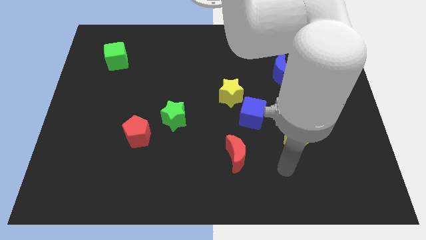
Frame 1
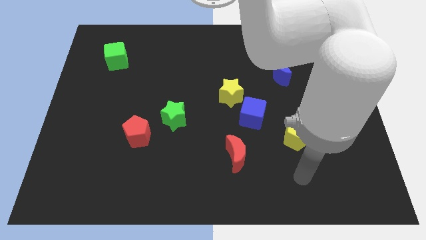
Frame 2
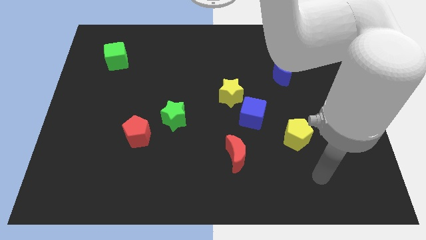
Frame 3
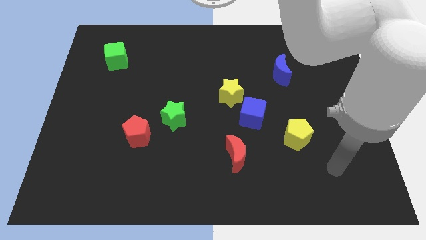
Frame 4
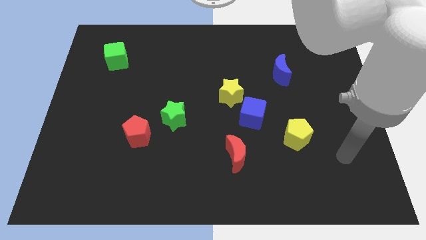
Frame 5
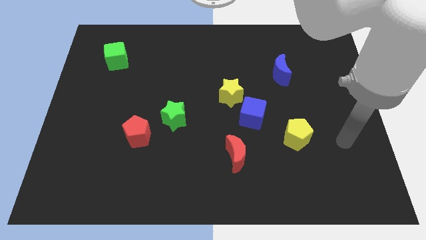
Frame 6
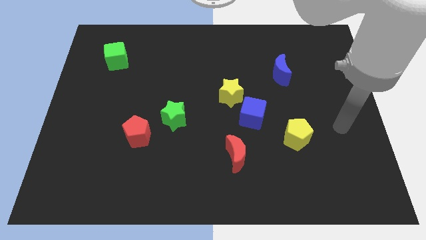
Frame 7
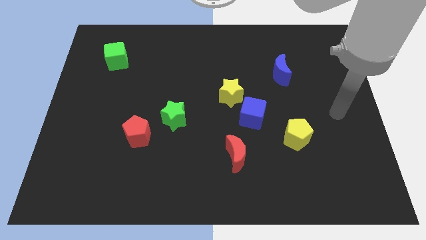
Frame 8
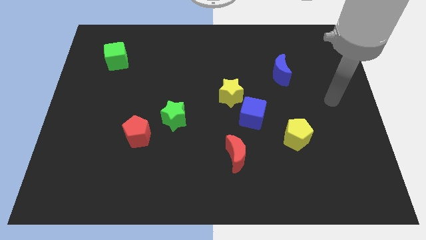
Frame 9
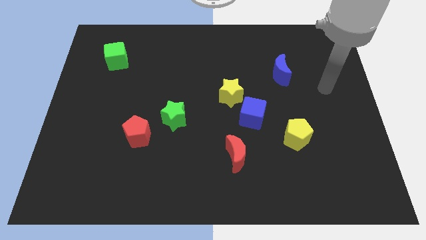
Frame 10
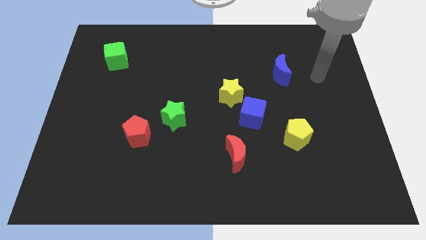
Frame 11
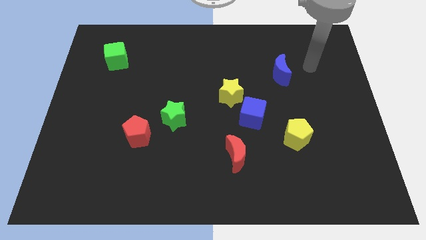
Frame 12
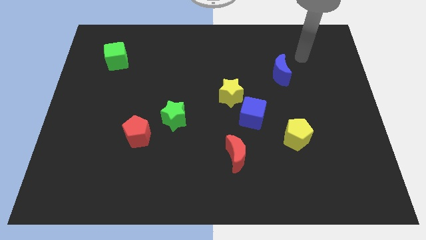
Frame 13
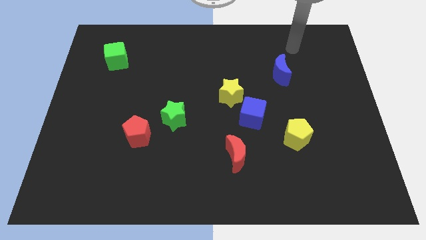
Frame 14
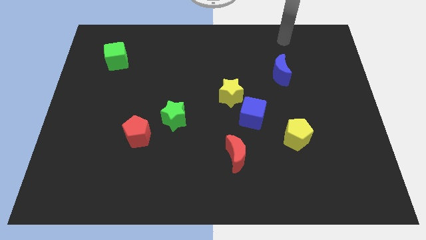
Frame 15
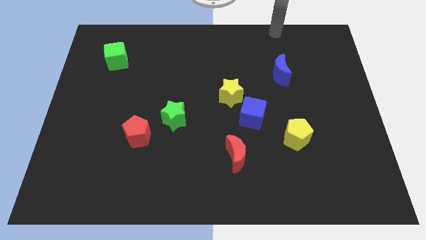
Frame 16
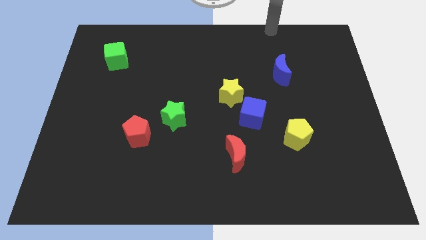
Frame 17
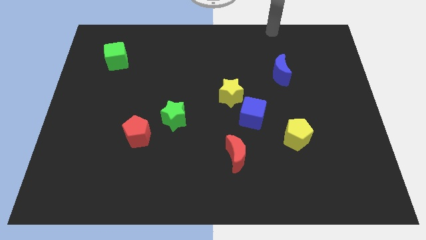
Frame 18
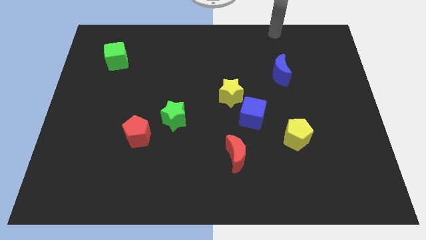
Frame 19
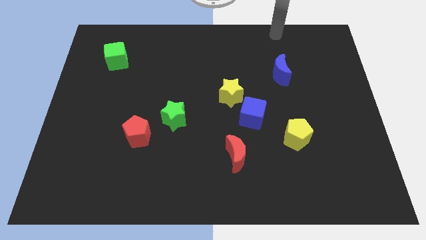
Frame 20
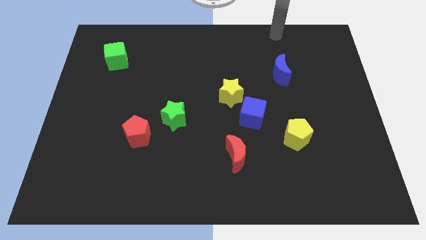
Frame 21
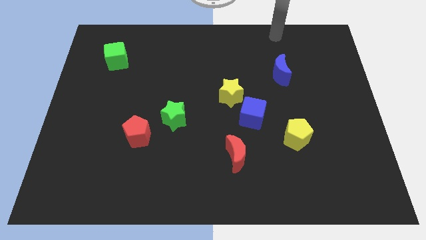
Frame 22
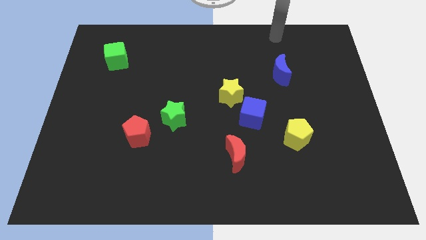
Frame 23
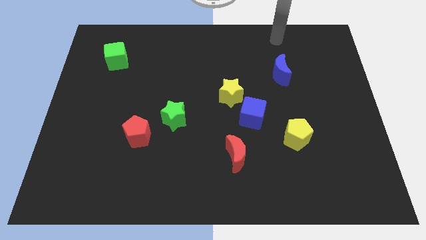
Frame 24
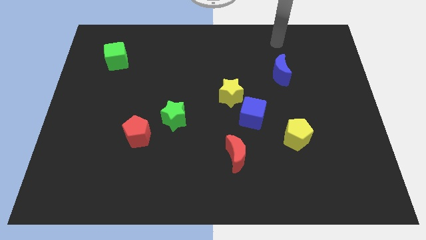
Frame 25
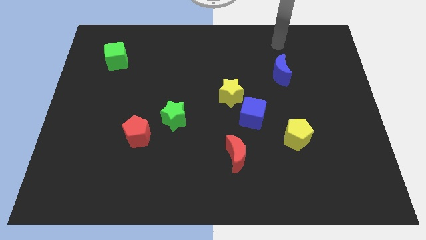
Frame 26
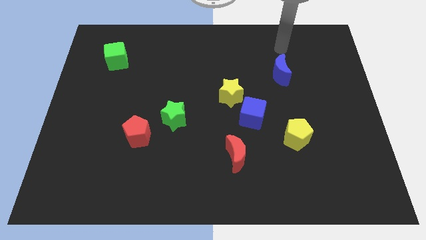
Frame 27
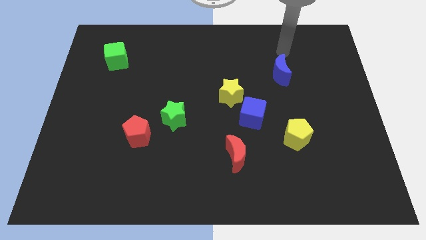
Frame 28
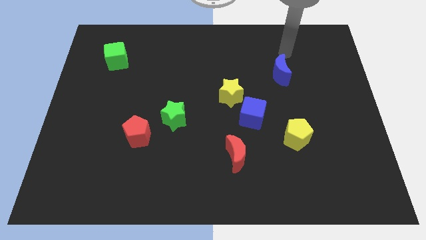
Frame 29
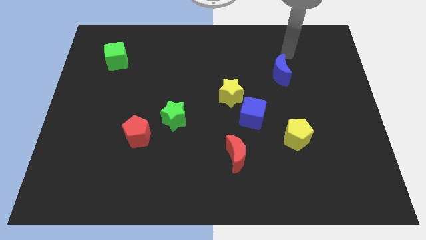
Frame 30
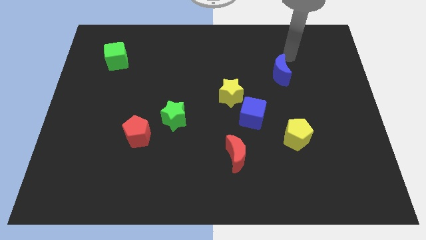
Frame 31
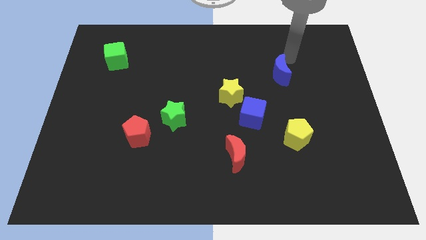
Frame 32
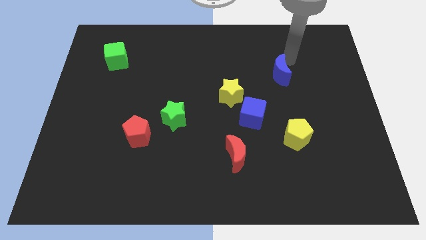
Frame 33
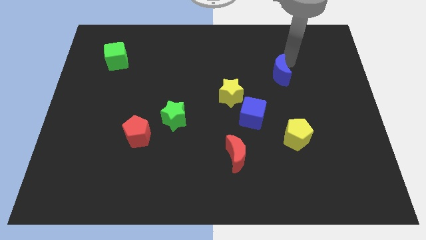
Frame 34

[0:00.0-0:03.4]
place your arm to right side of the blue moon

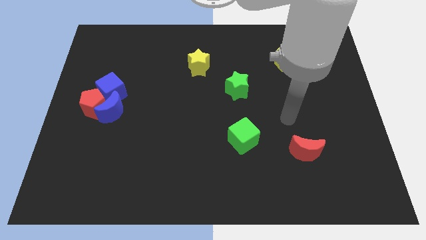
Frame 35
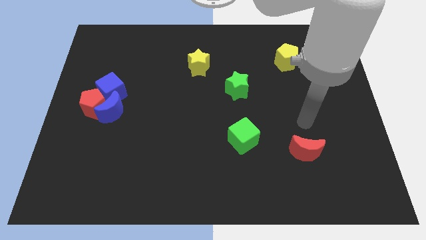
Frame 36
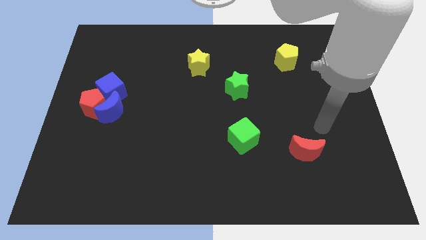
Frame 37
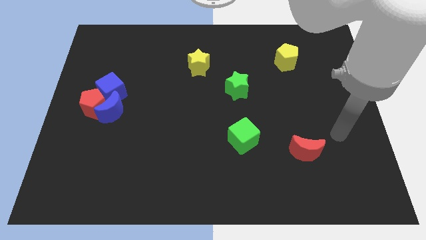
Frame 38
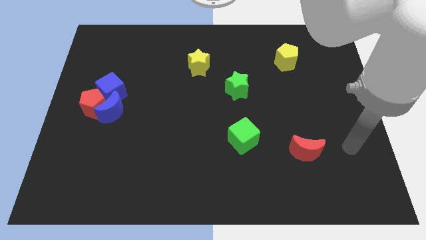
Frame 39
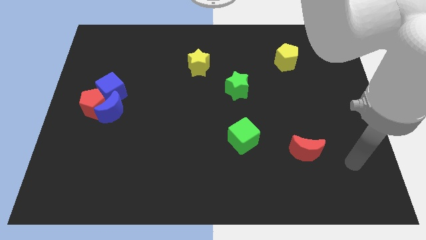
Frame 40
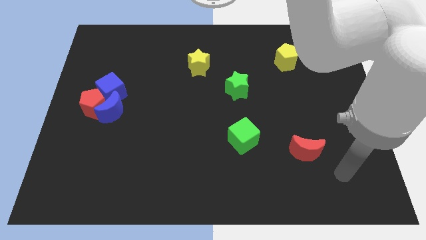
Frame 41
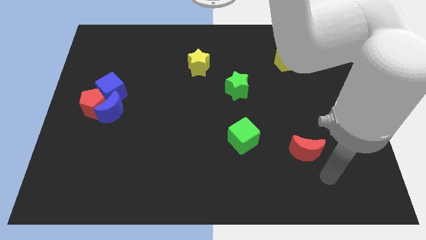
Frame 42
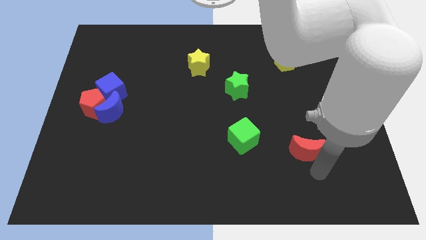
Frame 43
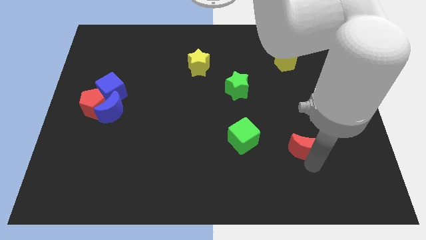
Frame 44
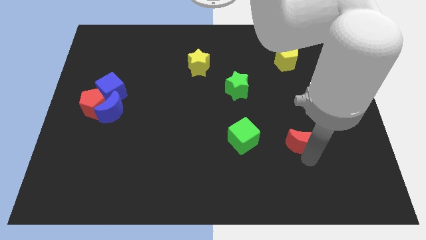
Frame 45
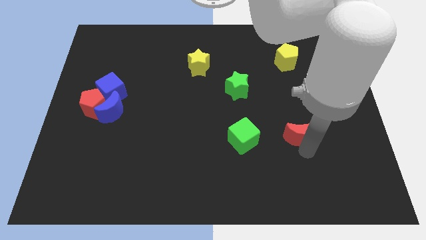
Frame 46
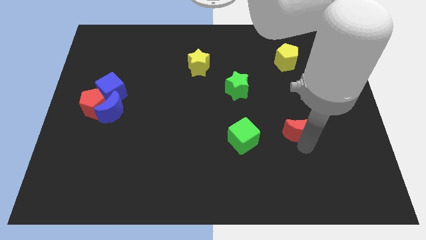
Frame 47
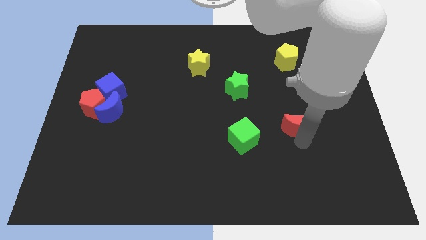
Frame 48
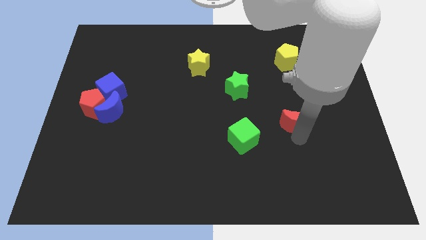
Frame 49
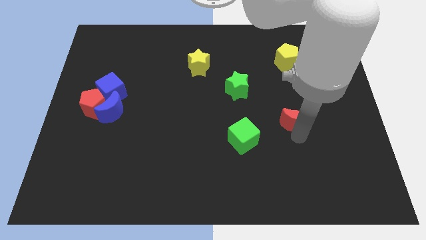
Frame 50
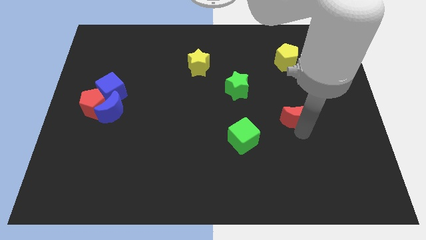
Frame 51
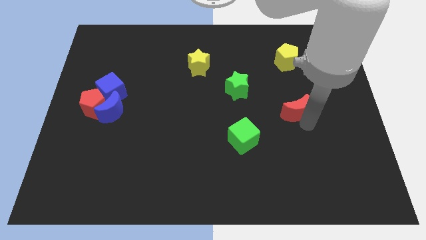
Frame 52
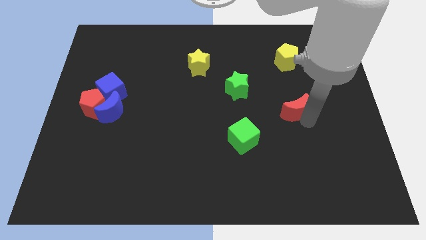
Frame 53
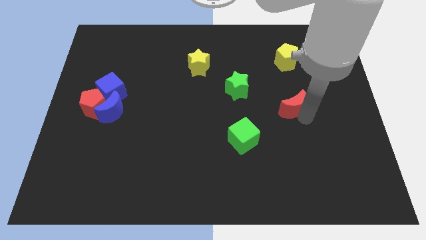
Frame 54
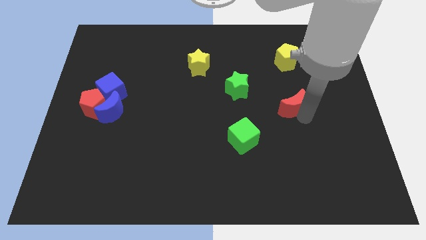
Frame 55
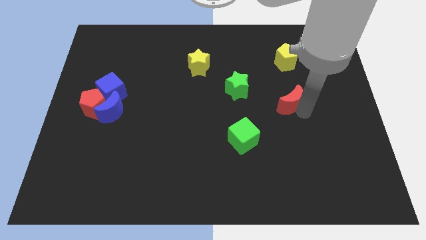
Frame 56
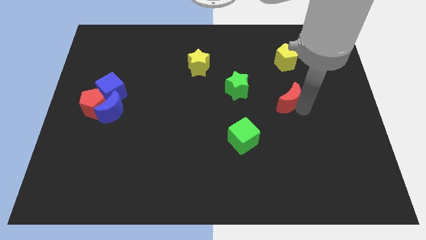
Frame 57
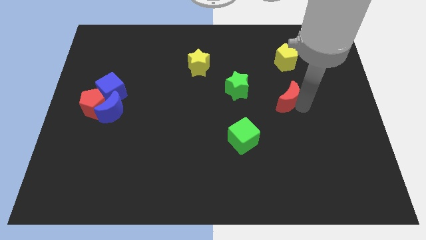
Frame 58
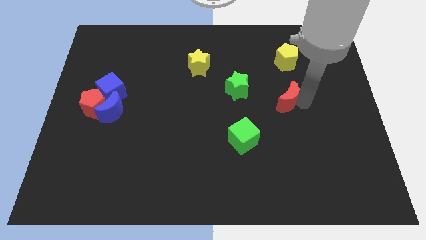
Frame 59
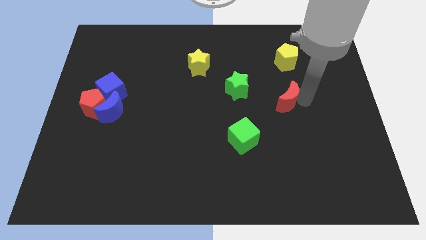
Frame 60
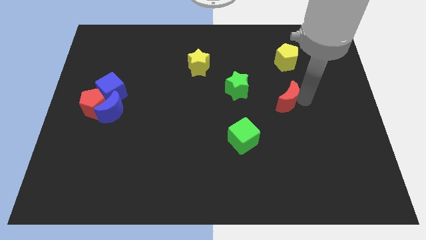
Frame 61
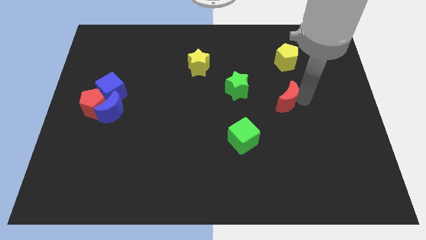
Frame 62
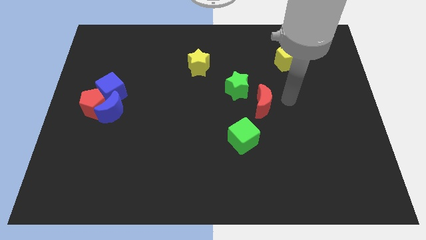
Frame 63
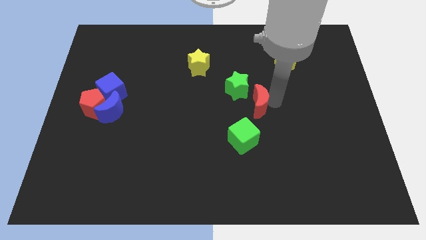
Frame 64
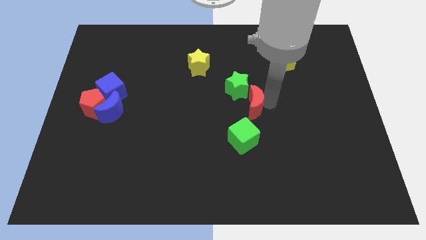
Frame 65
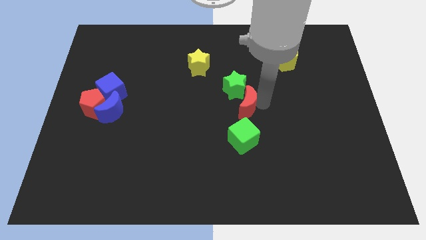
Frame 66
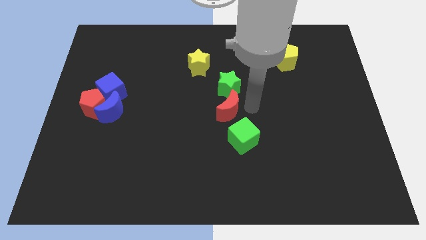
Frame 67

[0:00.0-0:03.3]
place the red moon in between the green cube and green star

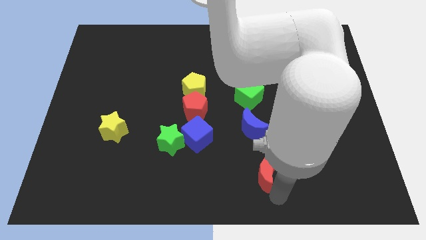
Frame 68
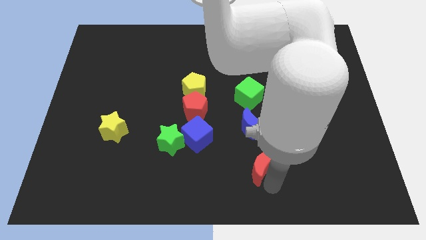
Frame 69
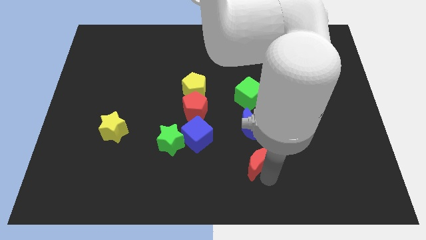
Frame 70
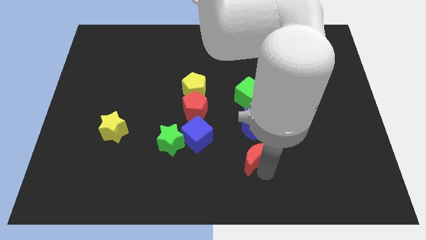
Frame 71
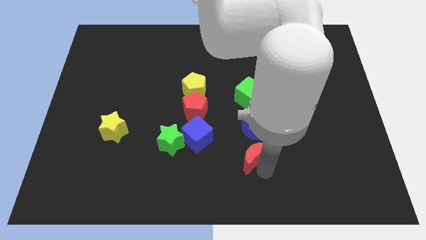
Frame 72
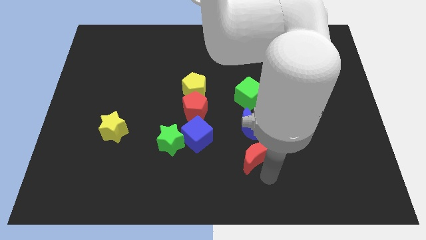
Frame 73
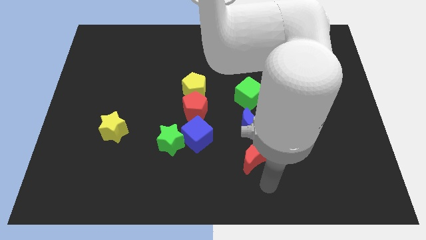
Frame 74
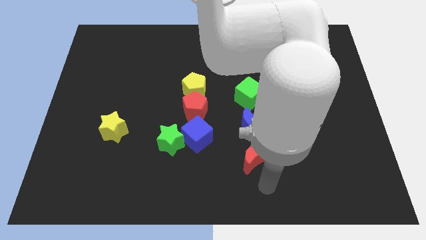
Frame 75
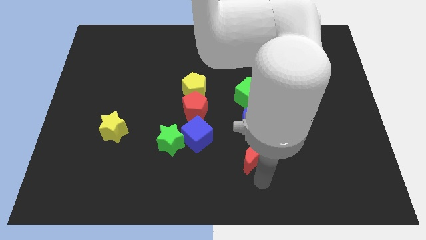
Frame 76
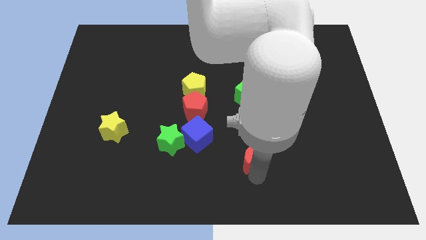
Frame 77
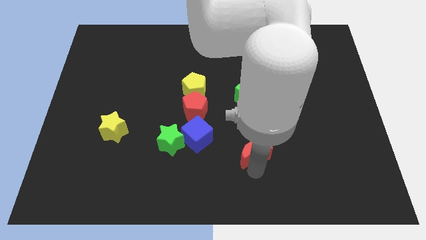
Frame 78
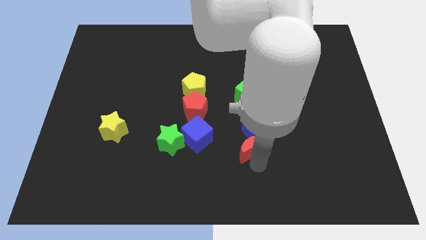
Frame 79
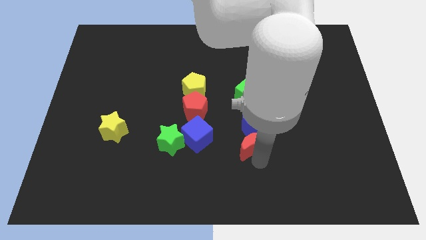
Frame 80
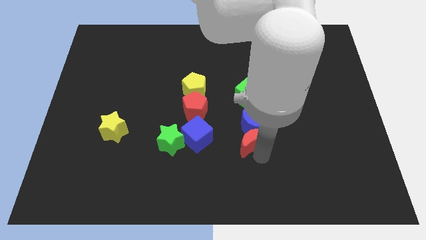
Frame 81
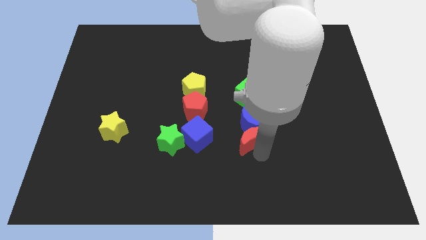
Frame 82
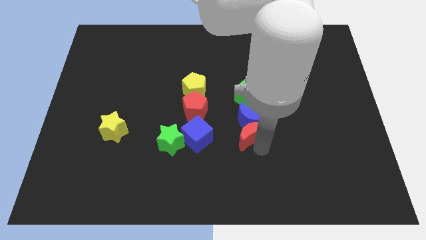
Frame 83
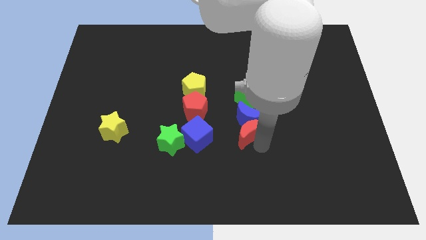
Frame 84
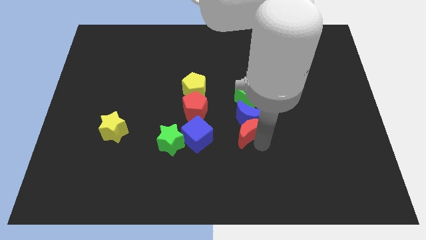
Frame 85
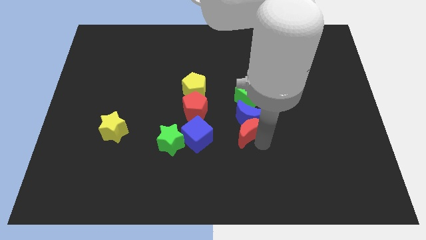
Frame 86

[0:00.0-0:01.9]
push the red crescent into the blue crescent

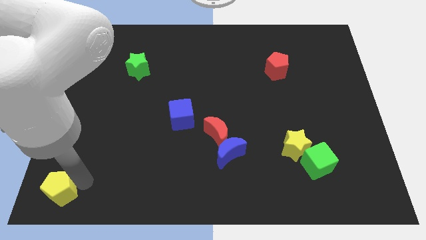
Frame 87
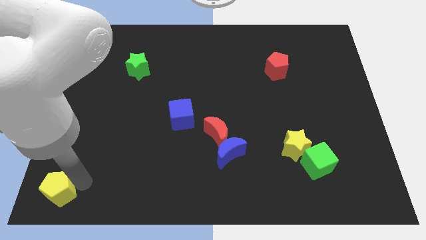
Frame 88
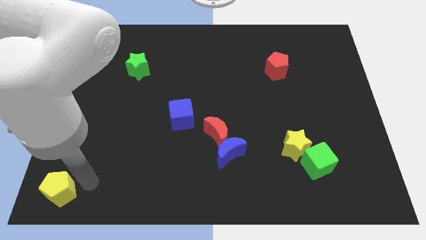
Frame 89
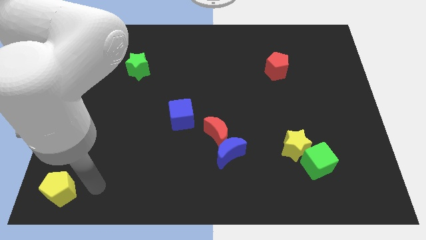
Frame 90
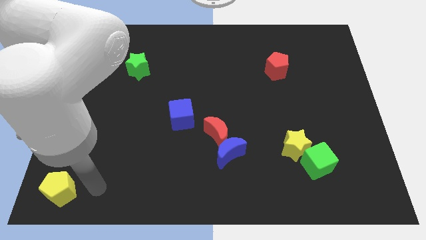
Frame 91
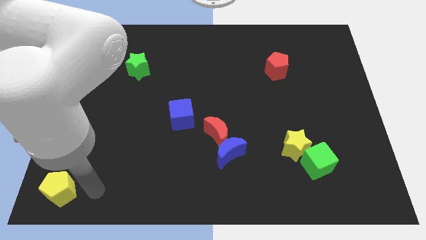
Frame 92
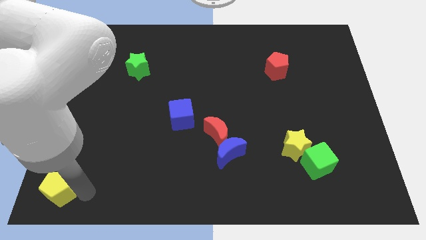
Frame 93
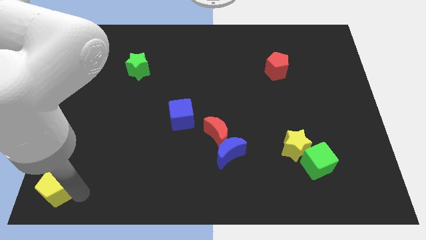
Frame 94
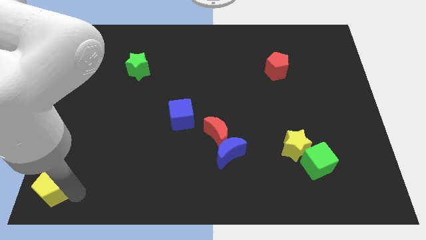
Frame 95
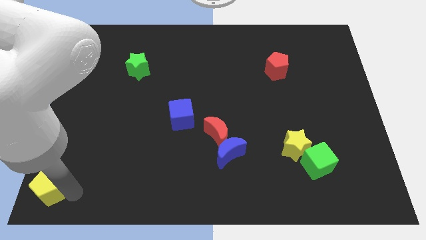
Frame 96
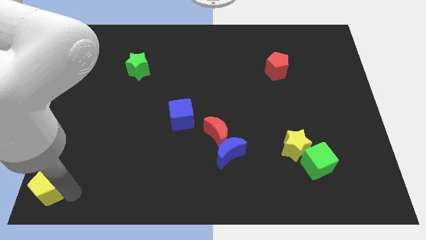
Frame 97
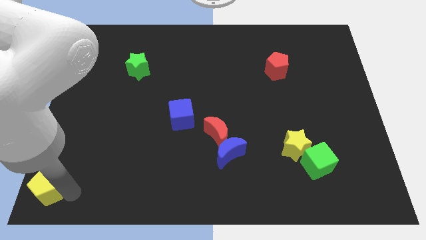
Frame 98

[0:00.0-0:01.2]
place the yellow pentagon diagonal to the blue cube
